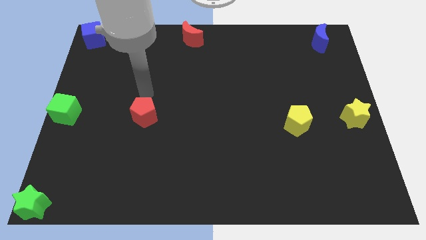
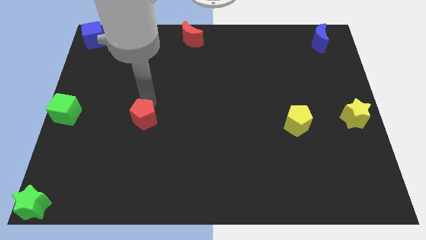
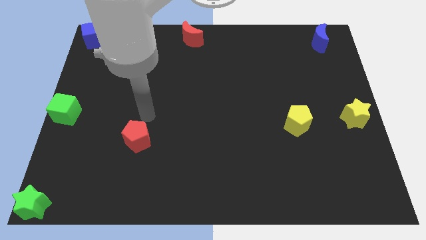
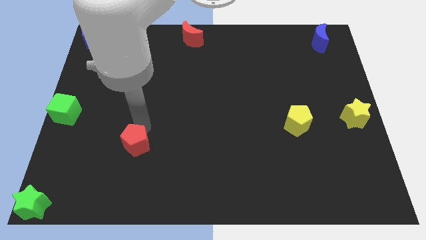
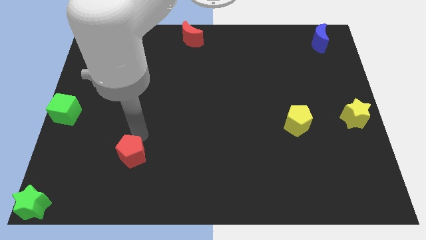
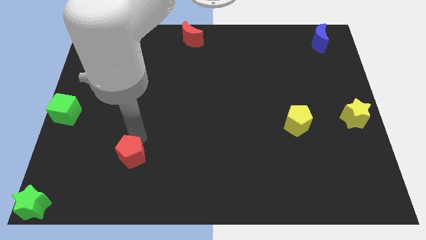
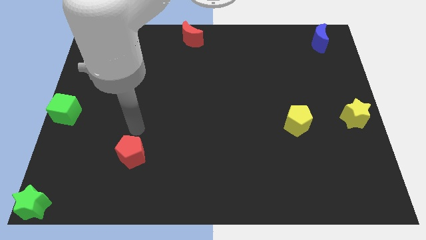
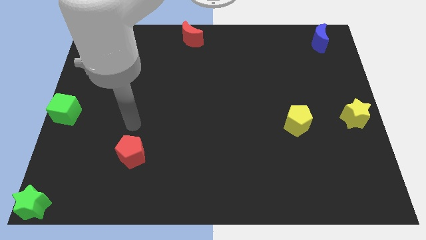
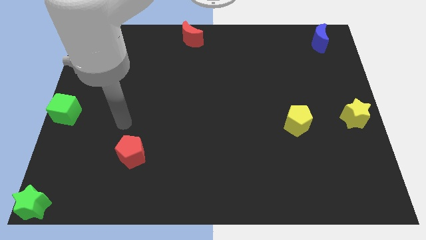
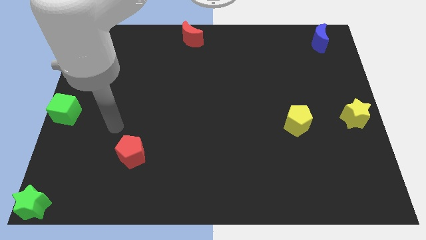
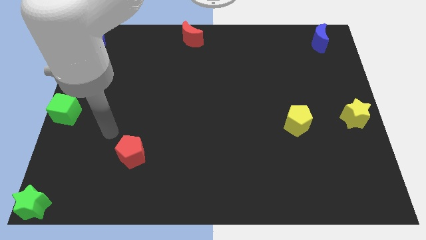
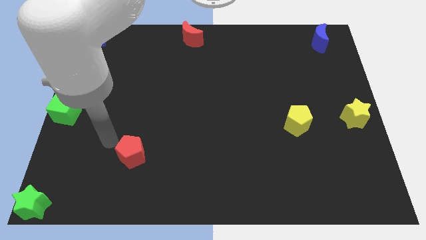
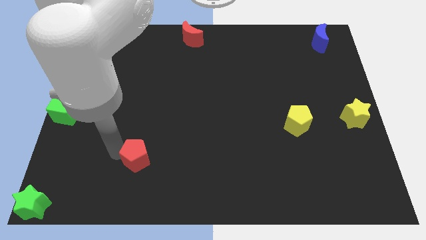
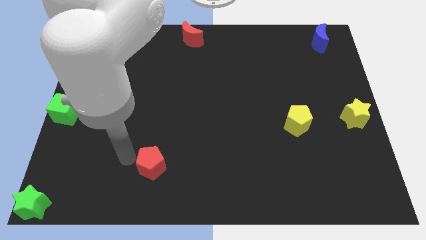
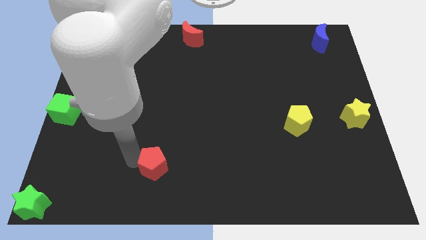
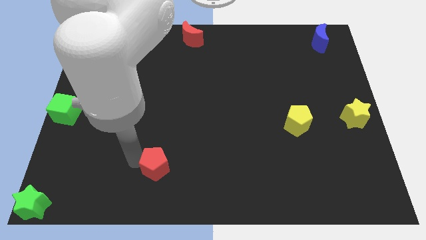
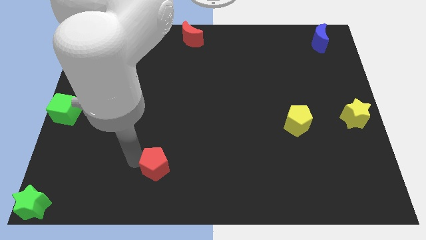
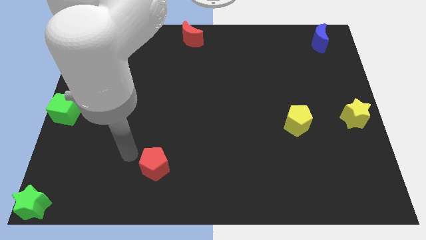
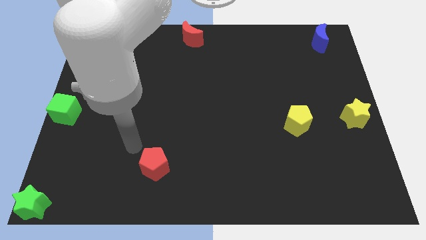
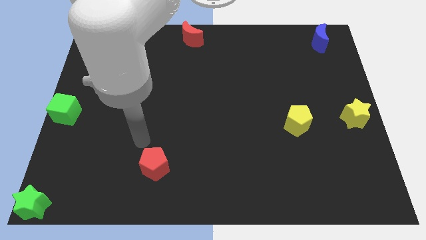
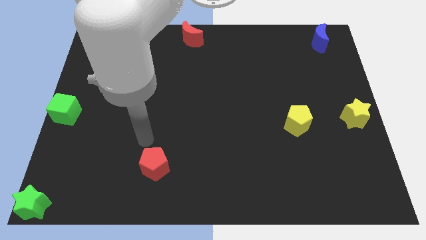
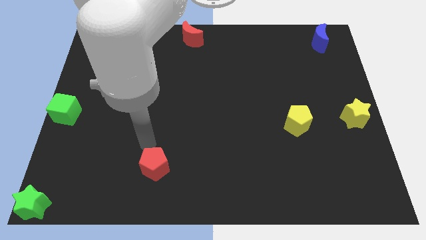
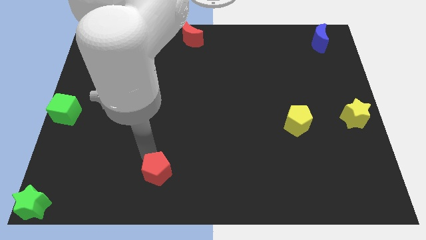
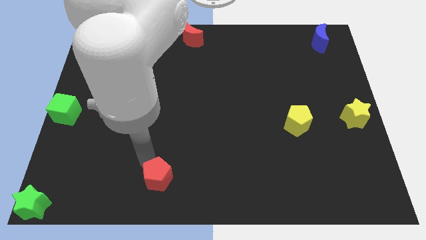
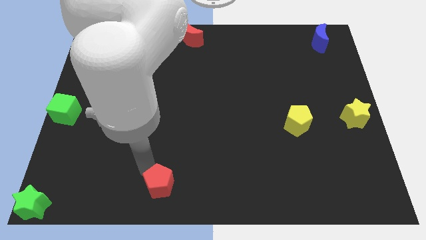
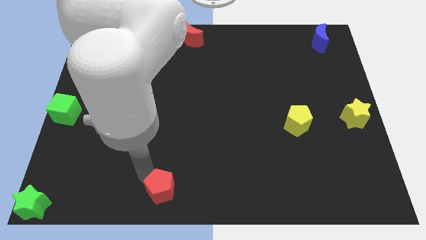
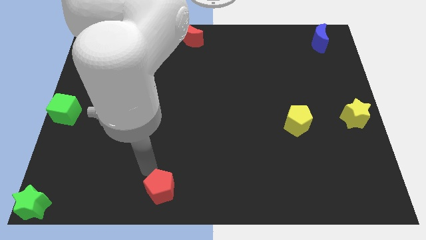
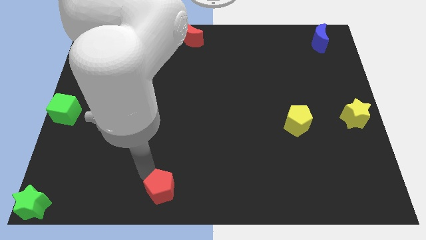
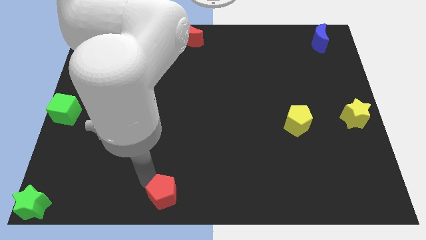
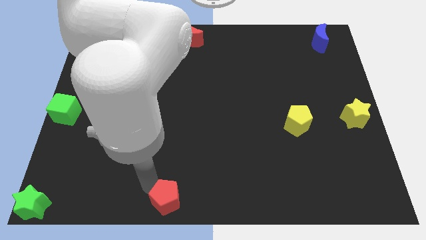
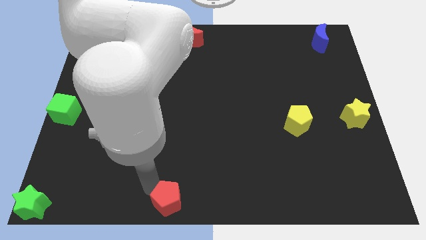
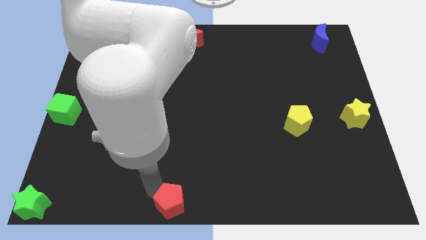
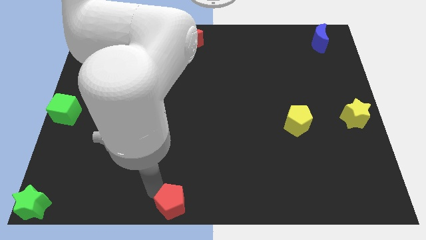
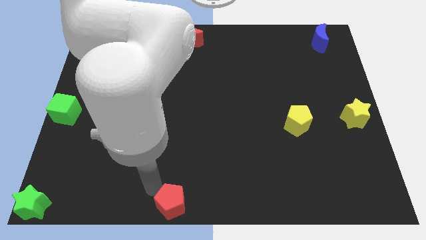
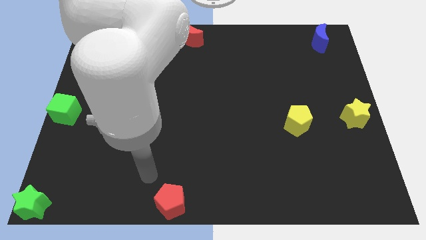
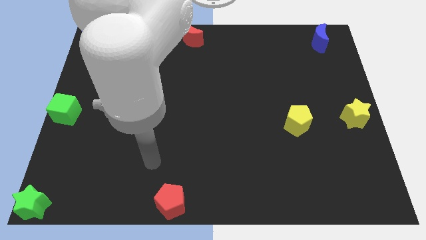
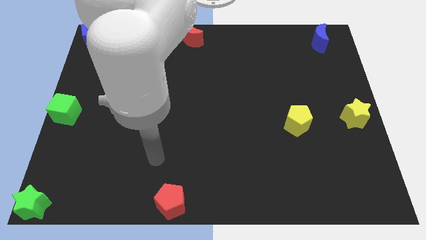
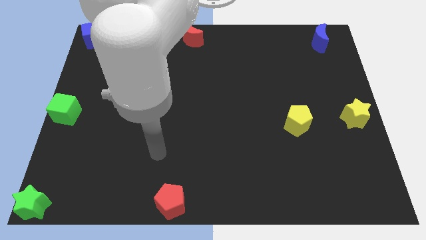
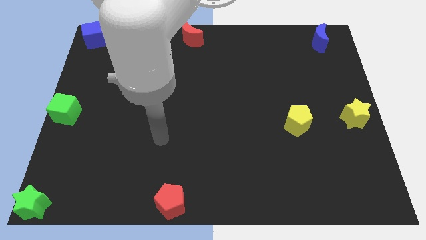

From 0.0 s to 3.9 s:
move the red pentagon to the bottom center of the board

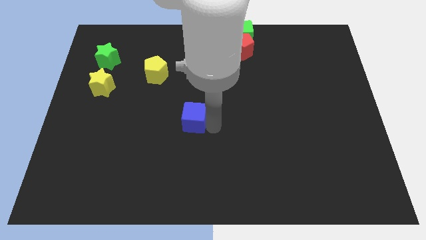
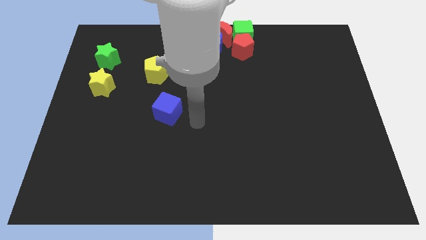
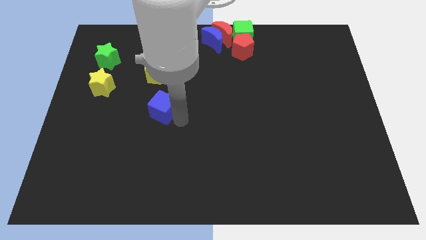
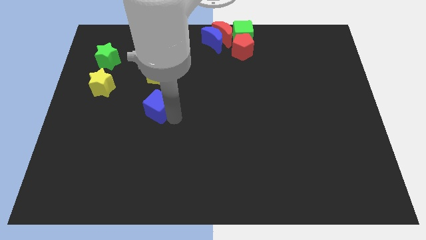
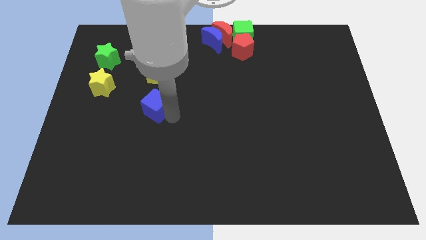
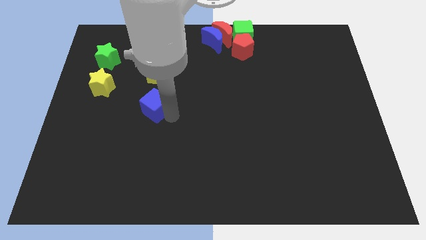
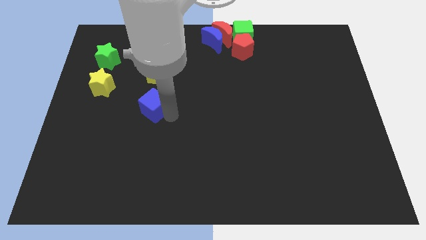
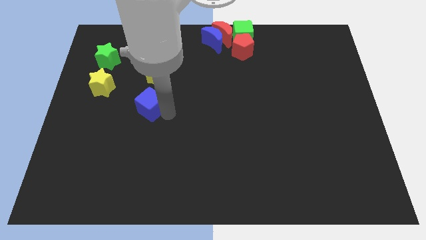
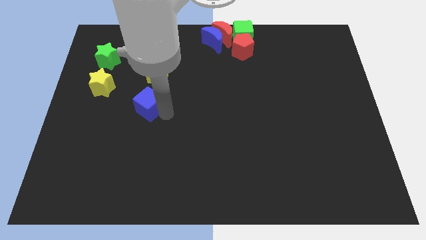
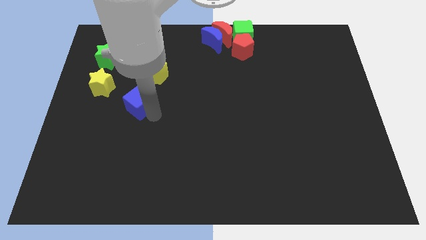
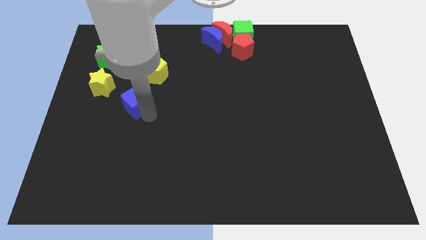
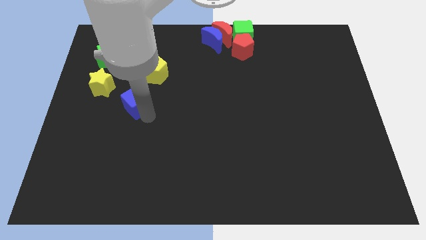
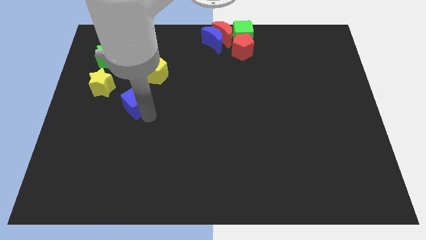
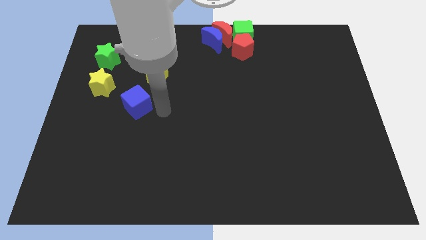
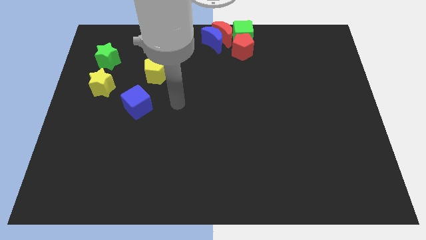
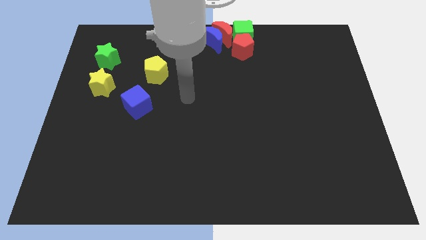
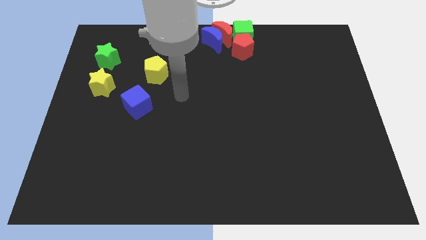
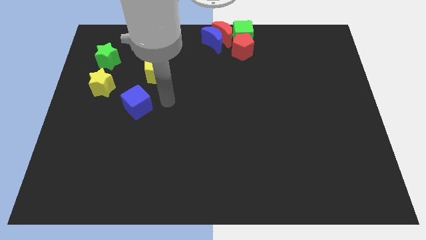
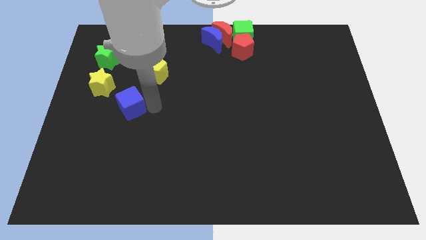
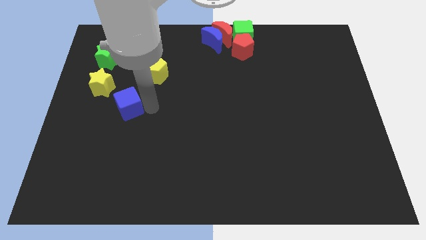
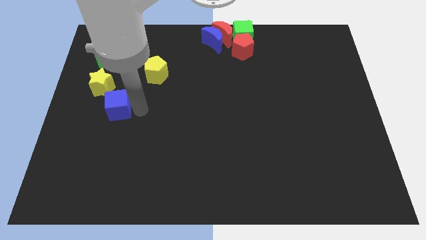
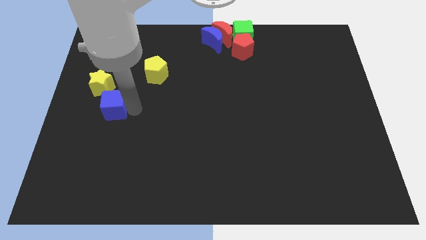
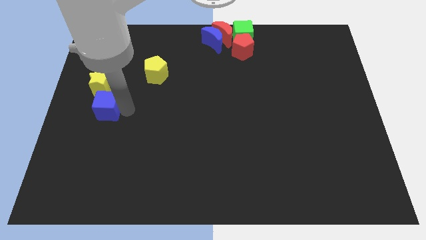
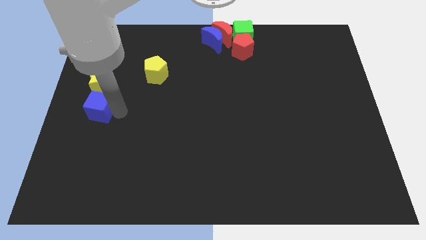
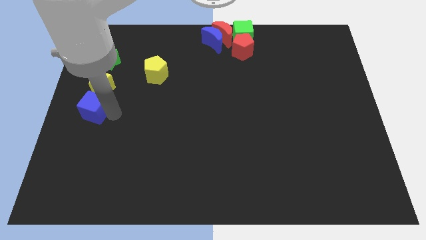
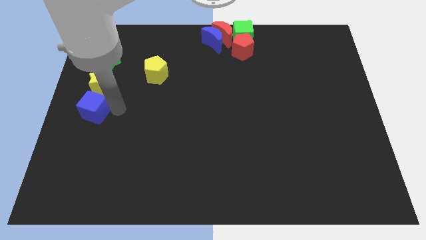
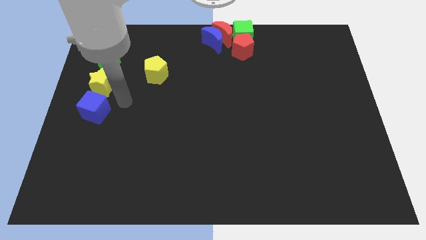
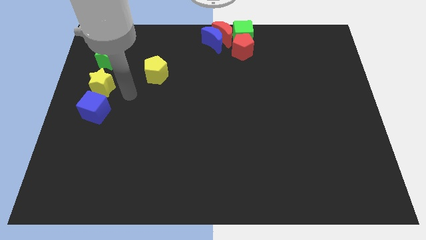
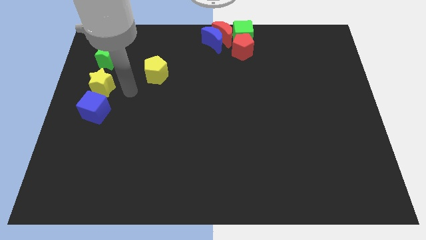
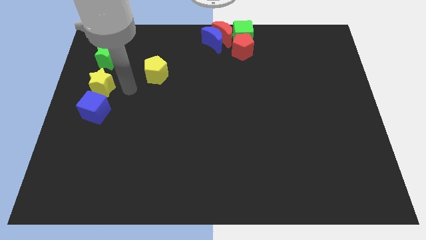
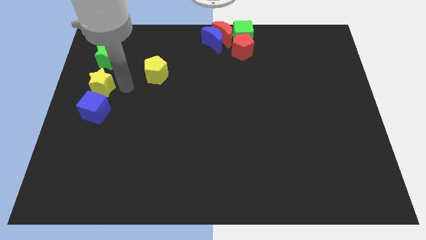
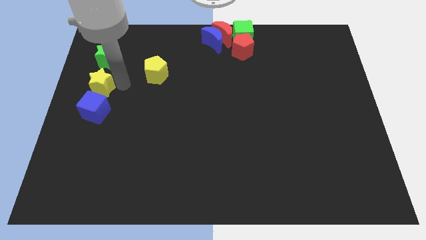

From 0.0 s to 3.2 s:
place the blue cube below the yellow star

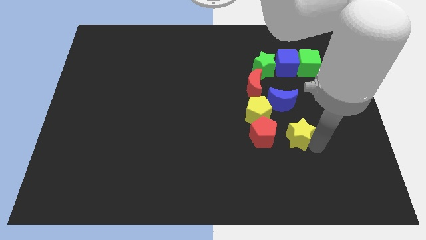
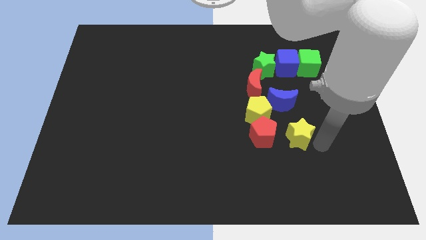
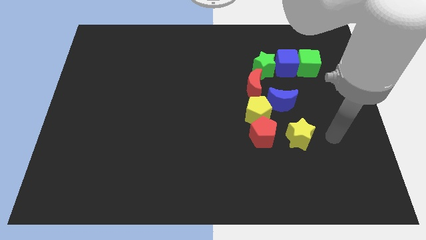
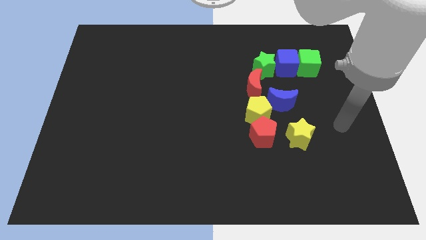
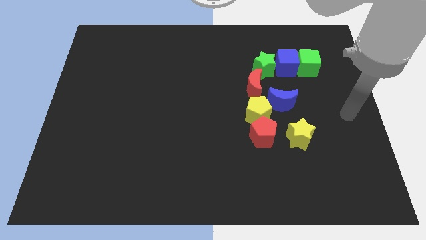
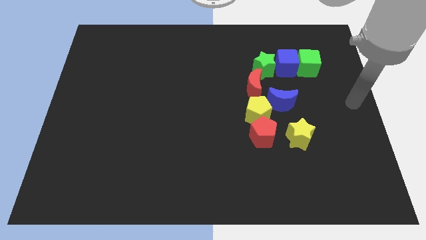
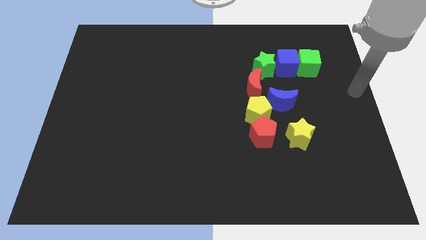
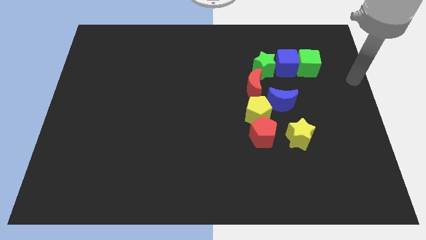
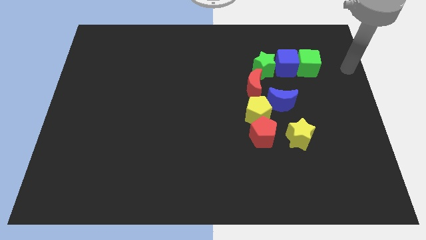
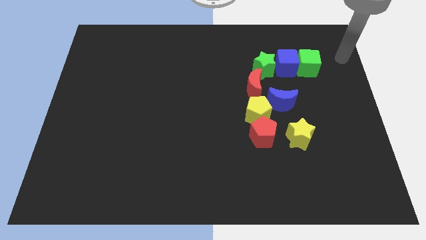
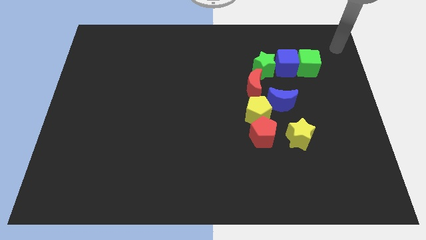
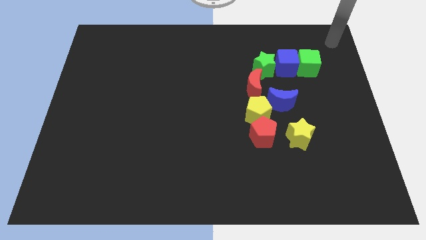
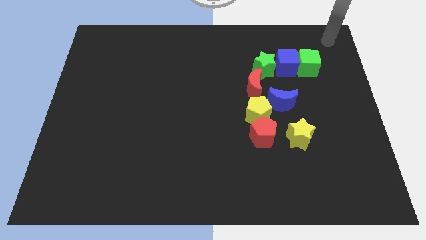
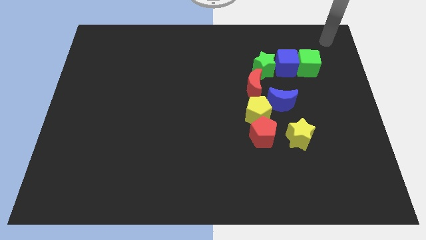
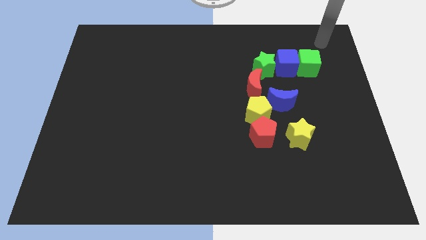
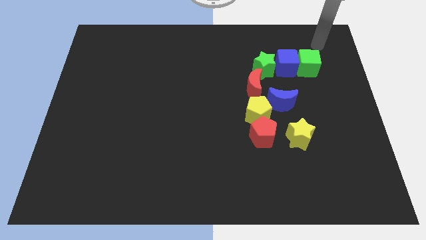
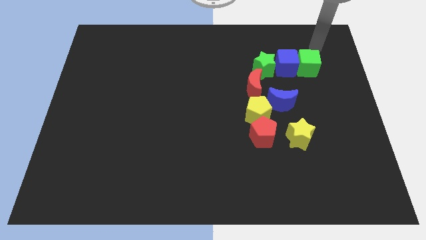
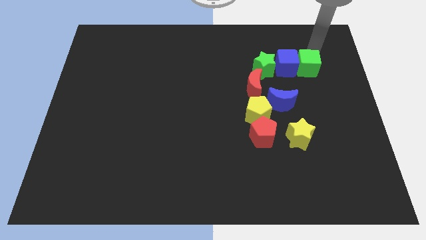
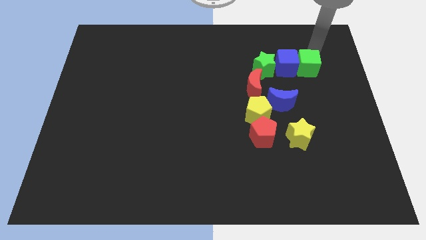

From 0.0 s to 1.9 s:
move your arm to the top of the green cube
